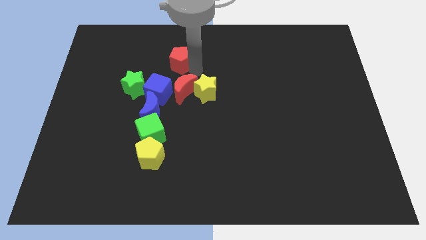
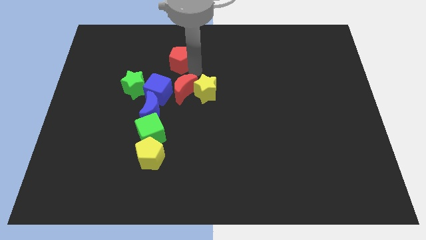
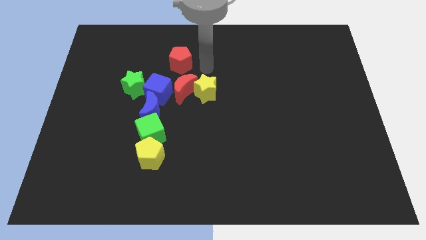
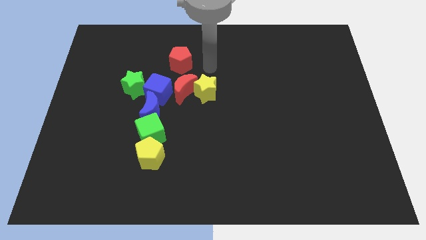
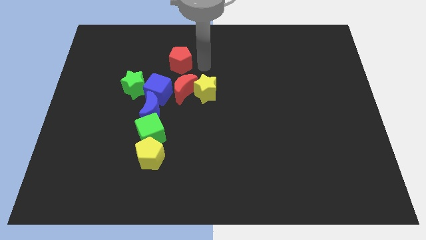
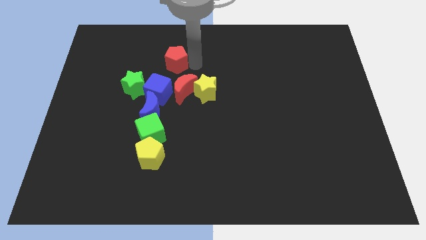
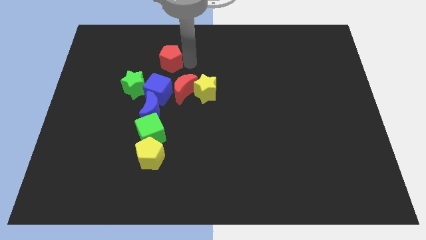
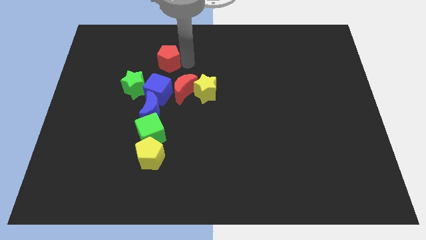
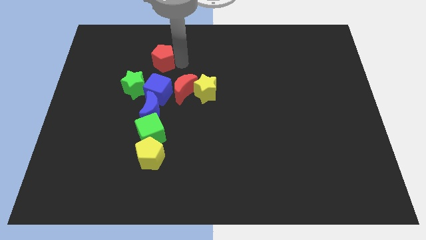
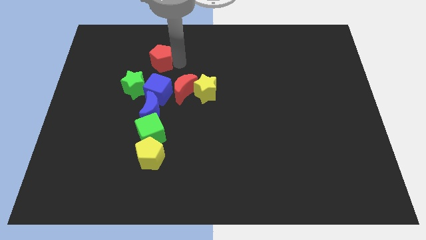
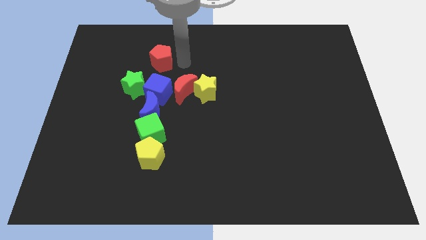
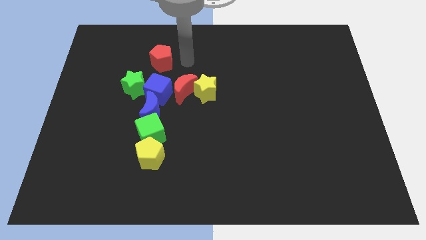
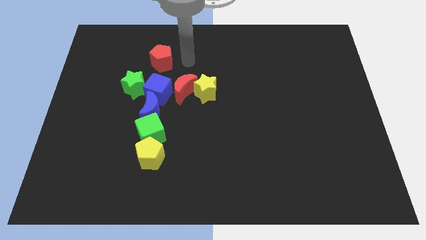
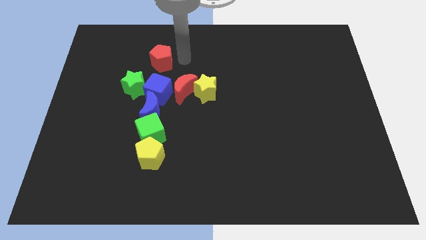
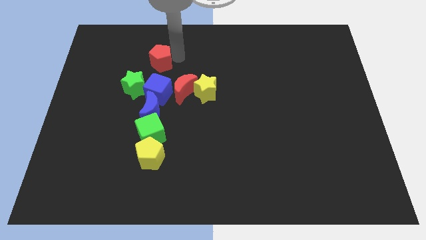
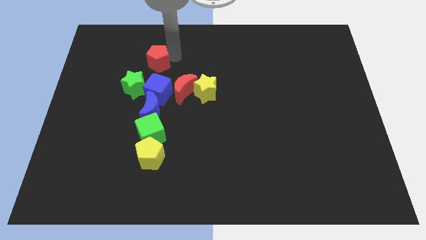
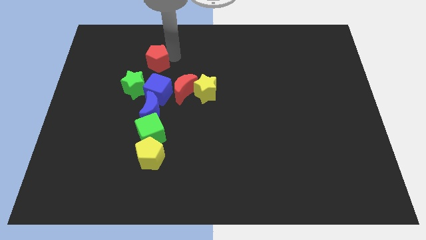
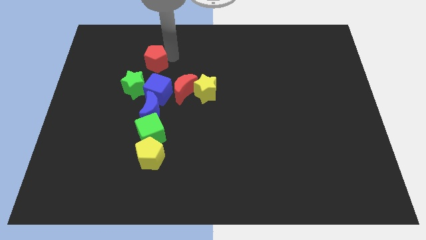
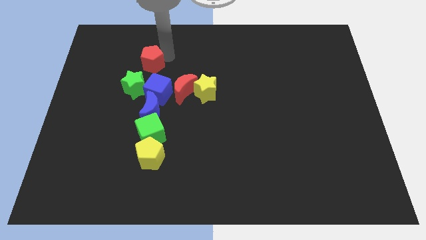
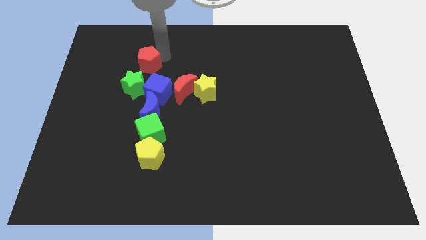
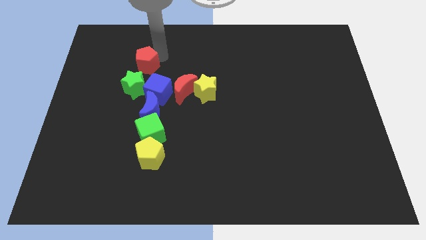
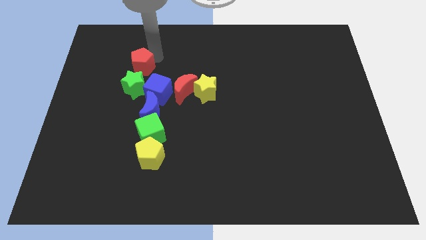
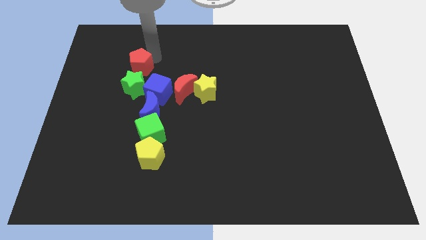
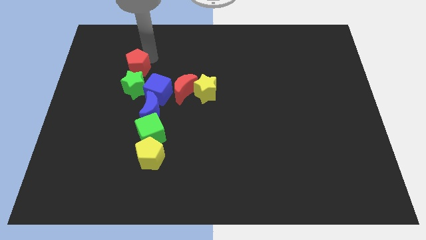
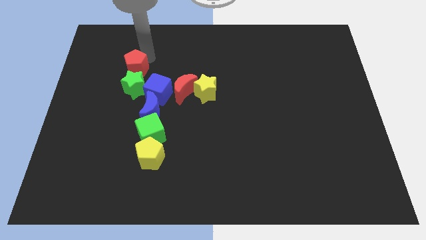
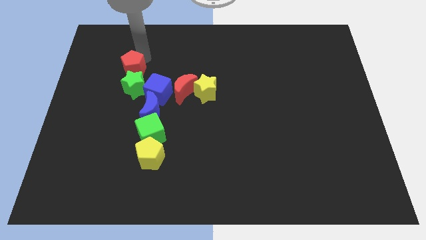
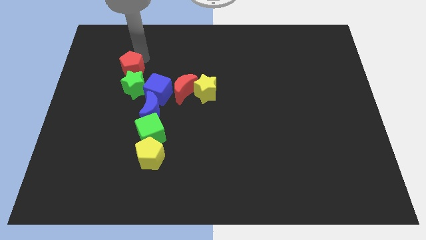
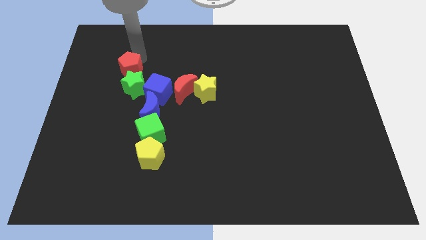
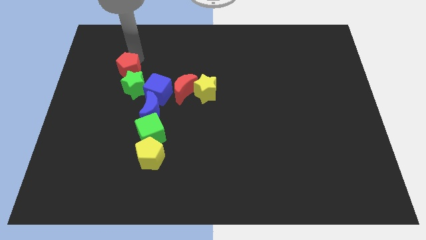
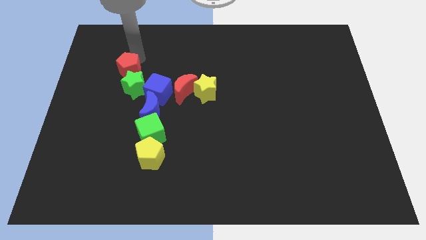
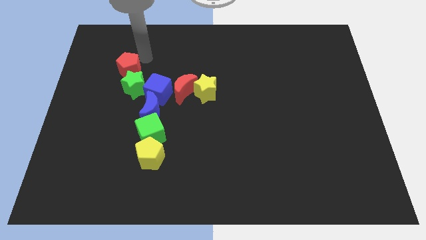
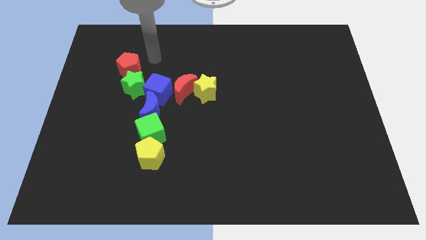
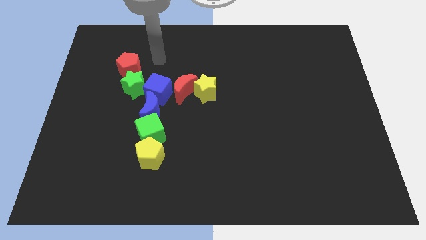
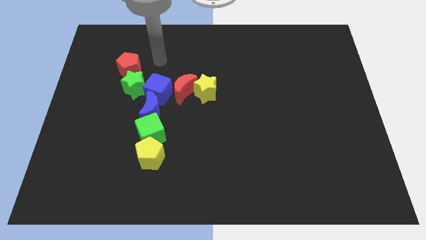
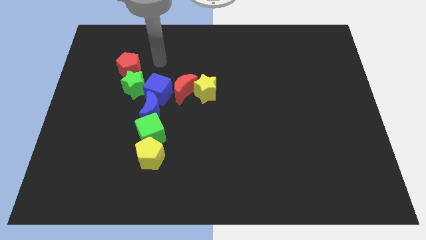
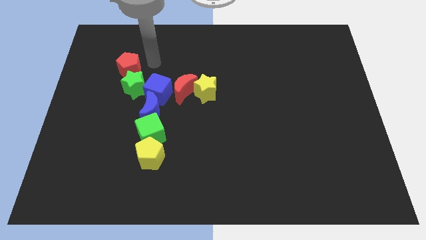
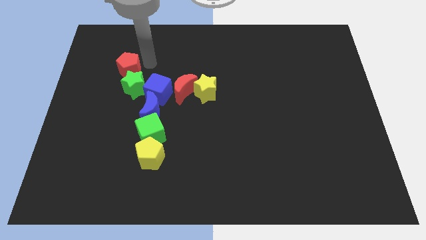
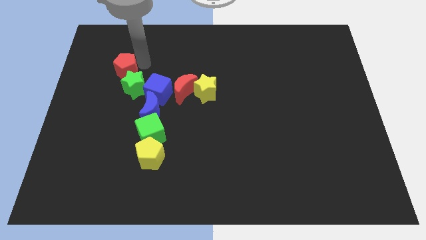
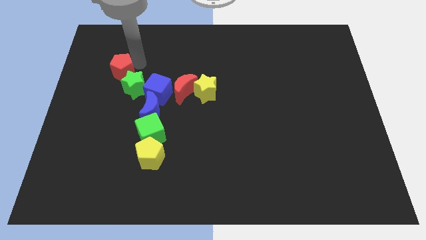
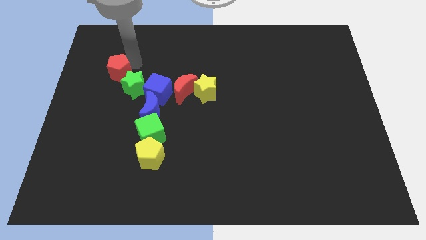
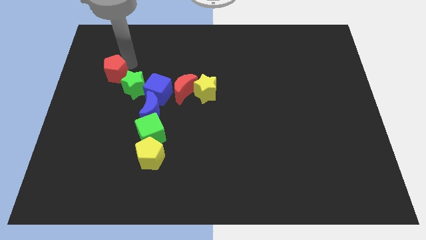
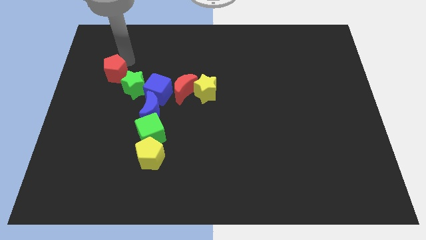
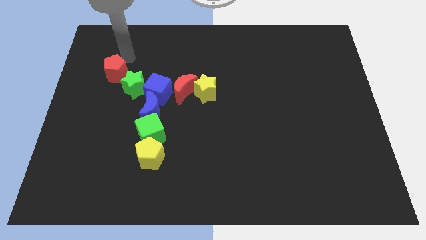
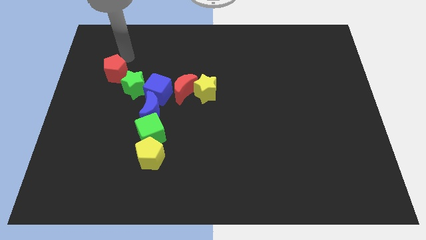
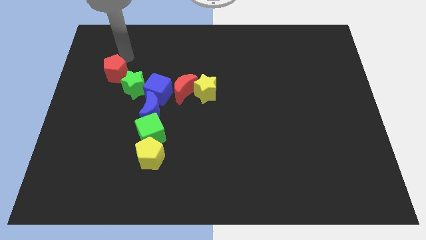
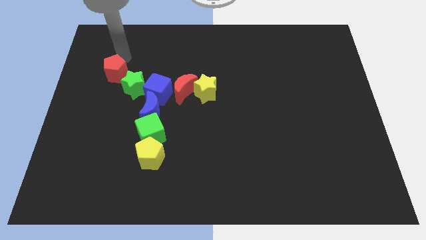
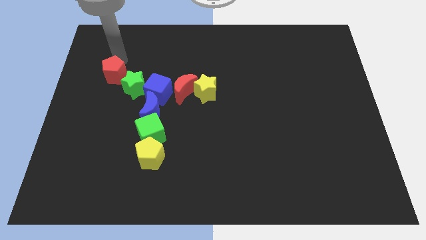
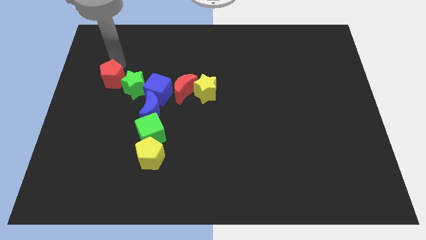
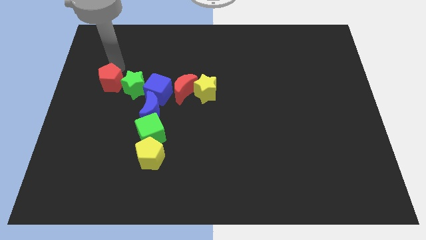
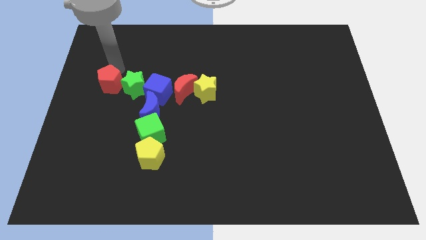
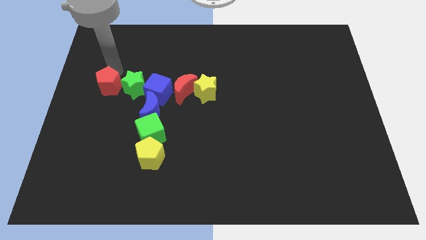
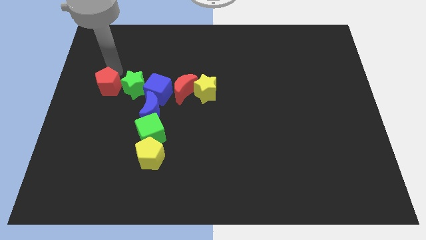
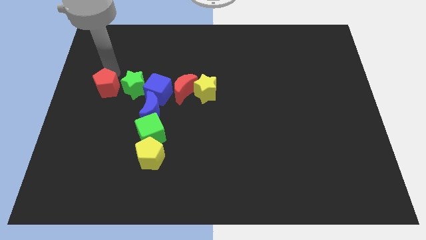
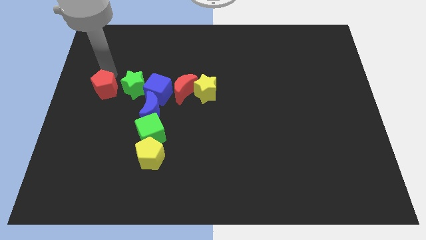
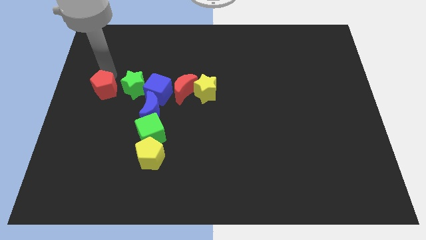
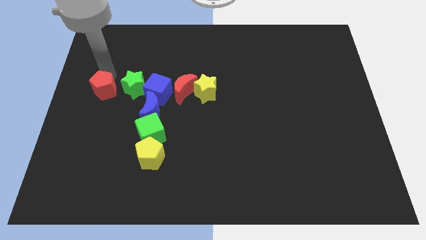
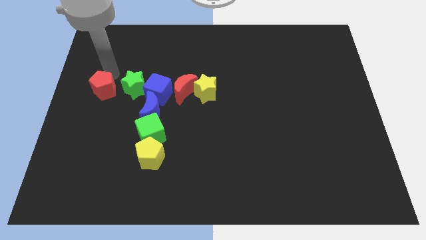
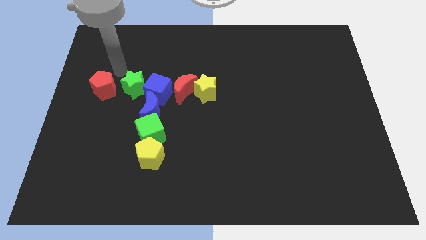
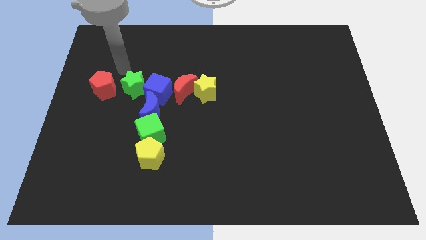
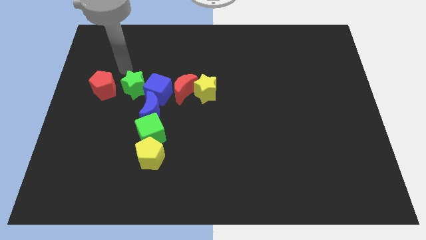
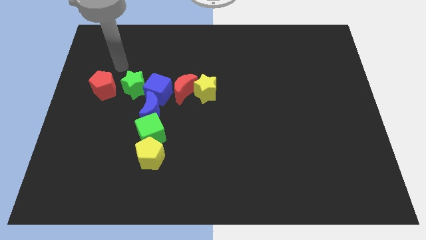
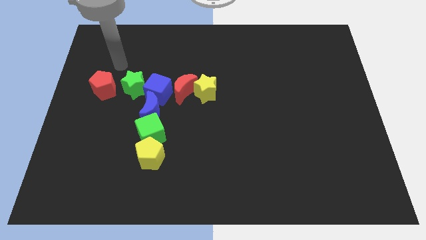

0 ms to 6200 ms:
put the red pentagon on the left side of the green star

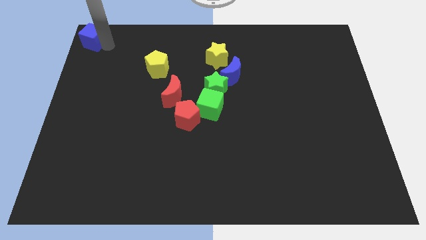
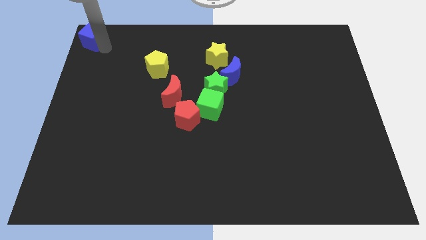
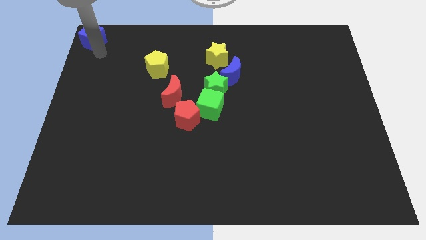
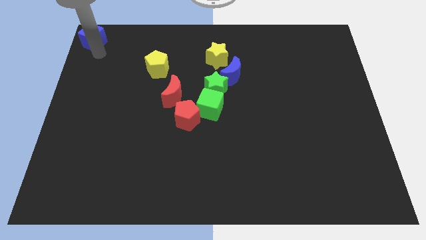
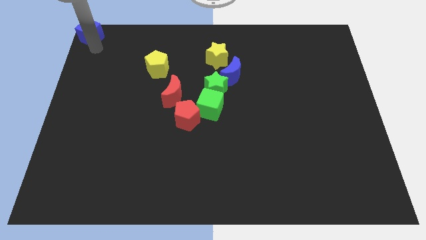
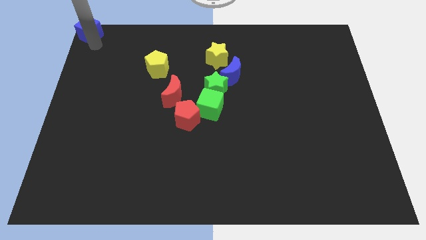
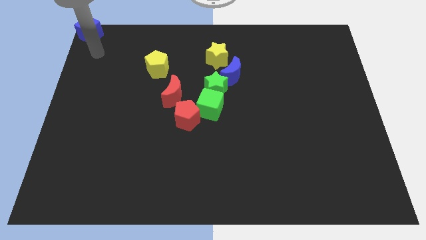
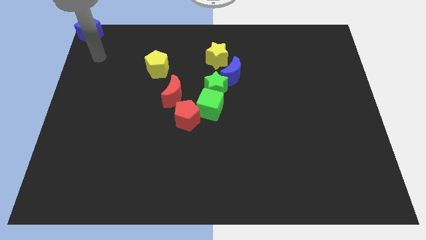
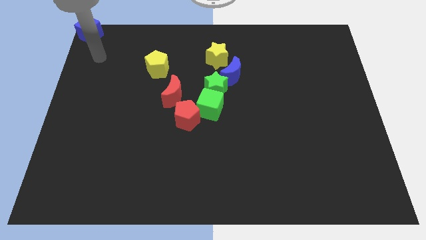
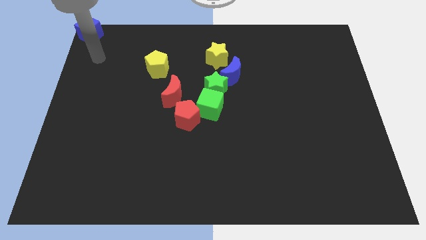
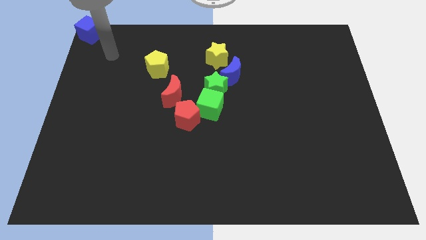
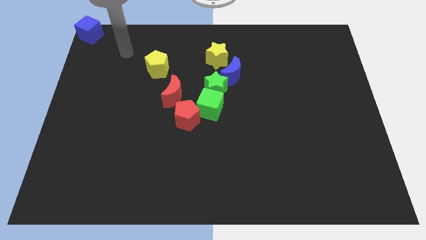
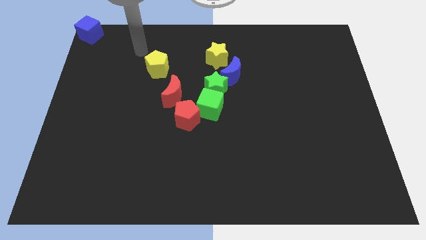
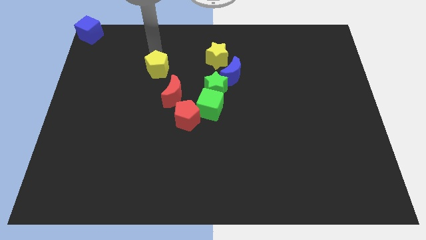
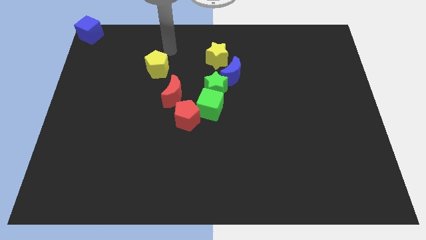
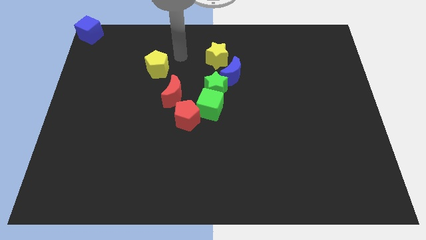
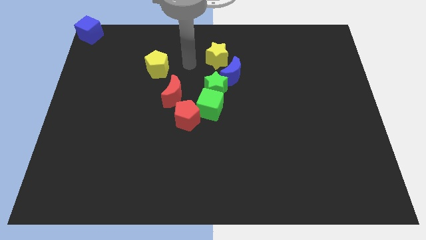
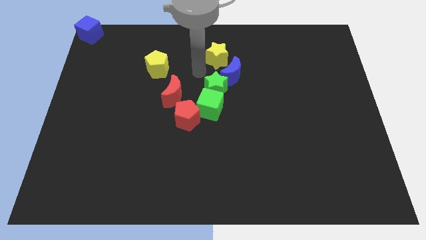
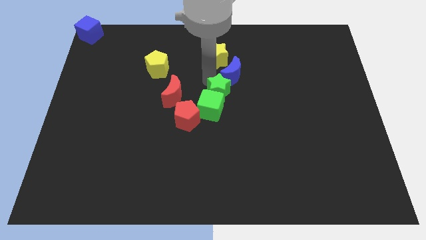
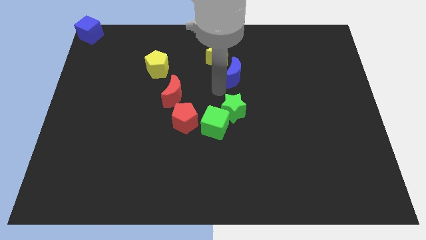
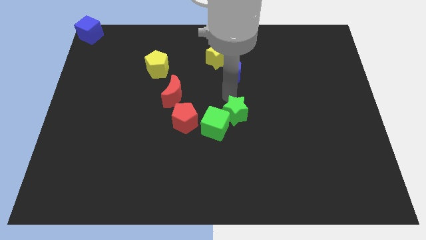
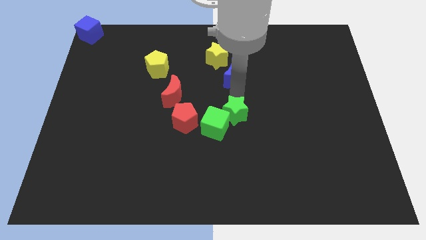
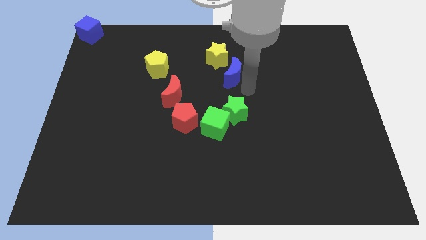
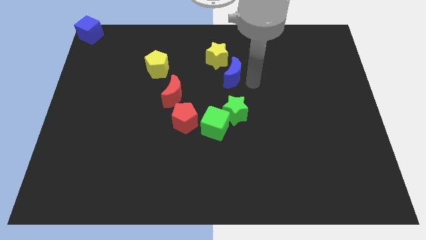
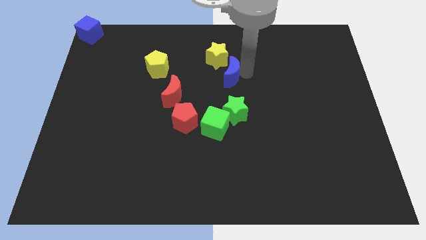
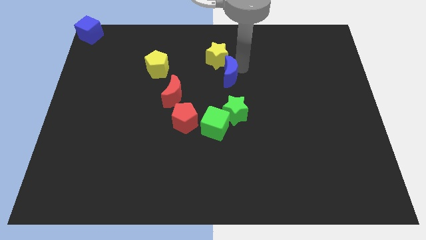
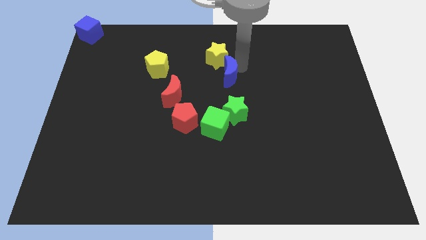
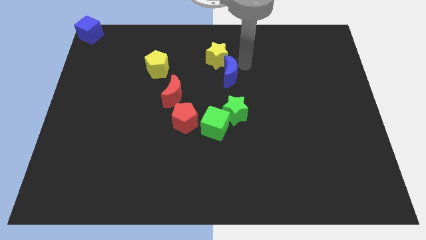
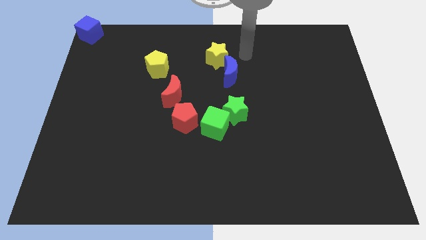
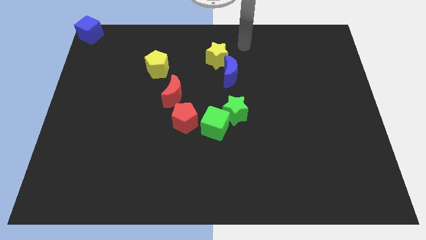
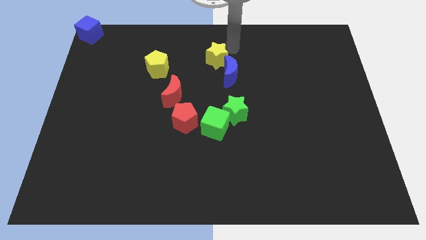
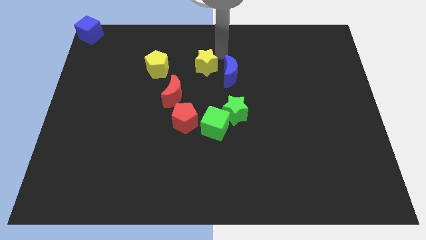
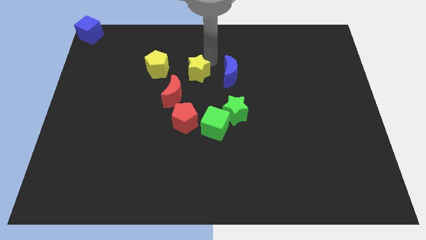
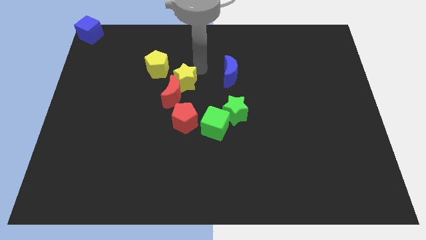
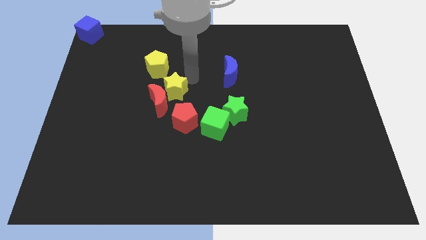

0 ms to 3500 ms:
push the yellow star diagonally bottom right to the yellow pentagon
